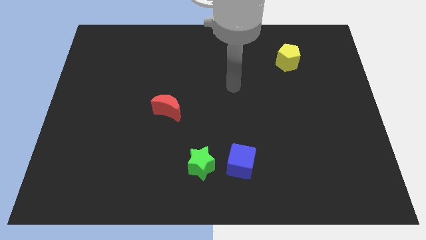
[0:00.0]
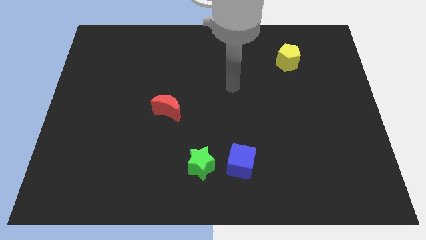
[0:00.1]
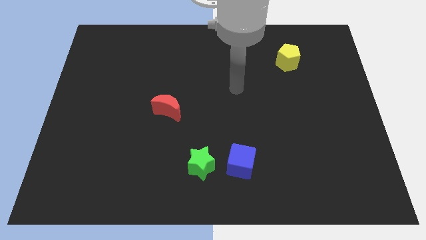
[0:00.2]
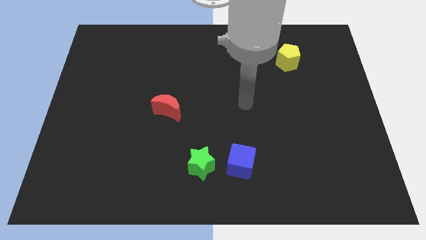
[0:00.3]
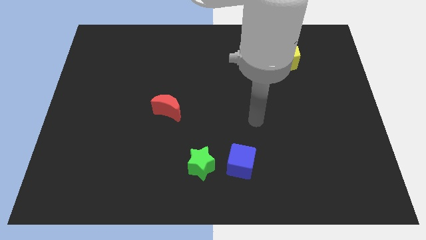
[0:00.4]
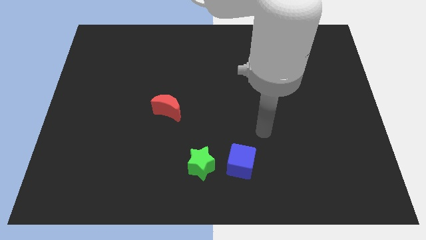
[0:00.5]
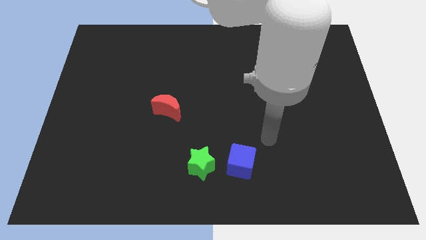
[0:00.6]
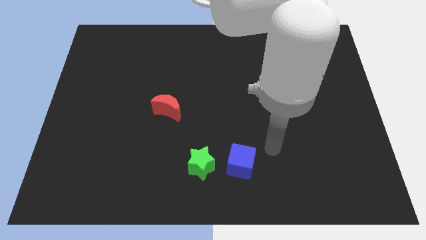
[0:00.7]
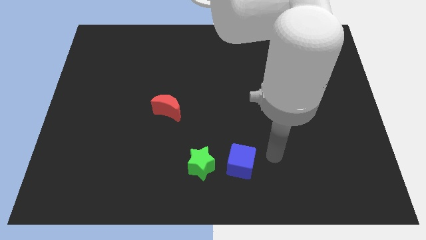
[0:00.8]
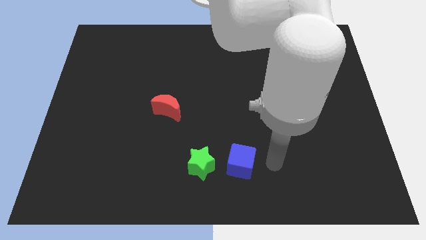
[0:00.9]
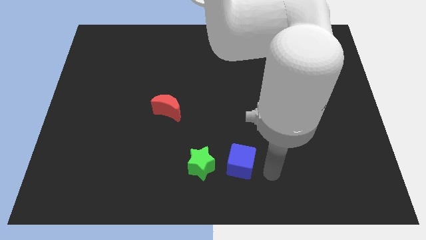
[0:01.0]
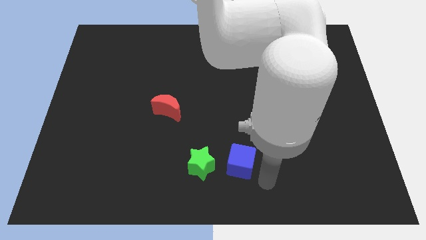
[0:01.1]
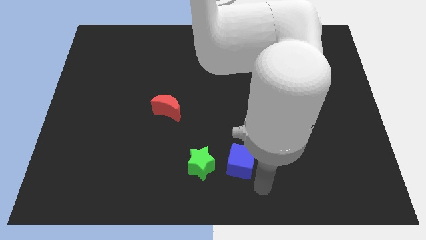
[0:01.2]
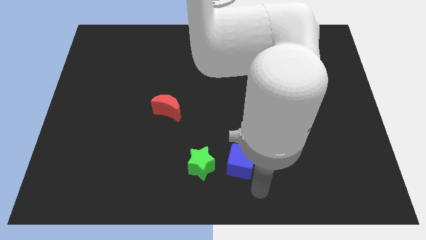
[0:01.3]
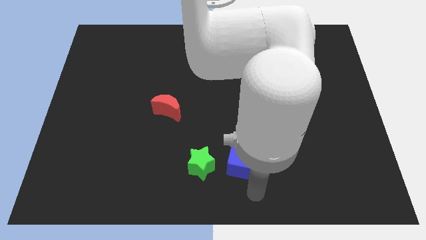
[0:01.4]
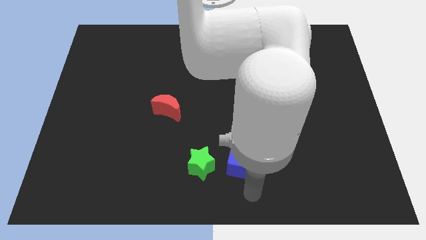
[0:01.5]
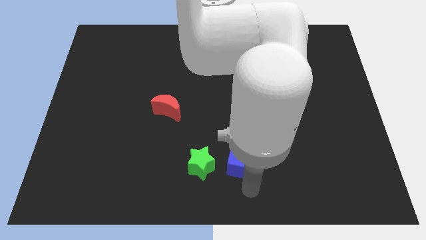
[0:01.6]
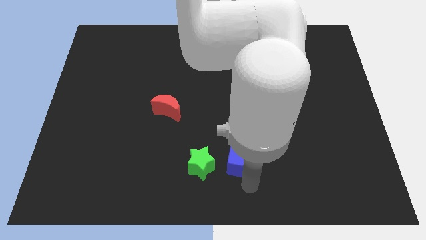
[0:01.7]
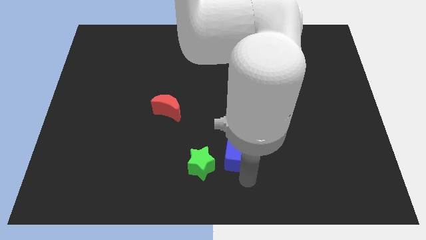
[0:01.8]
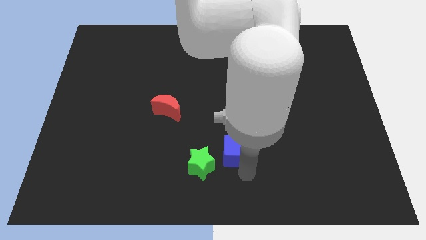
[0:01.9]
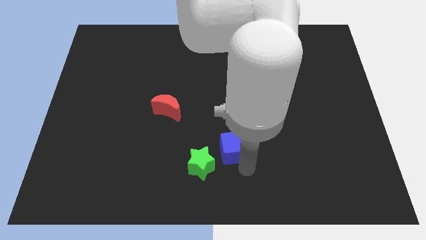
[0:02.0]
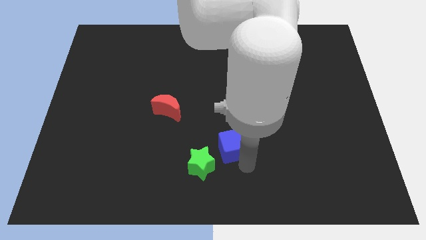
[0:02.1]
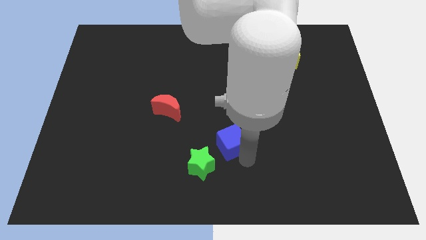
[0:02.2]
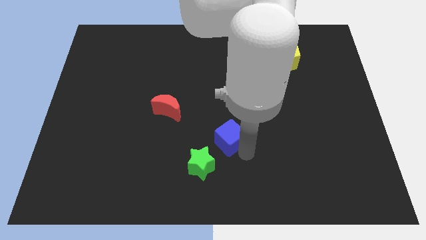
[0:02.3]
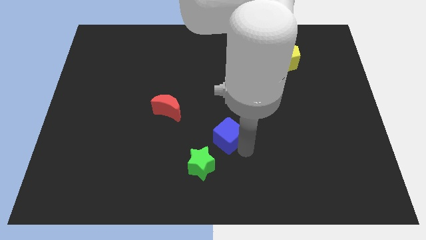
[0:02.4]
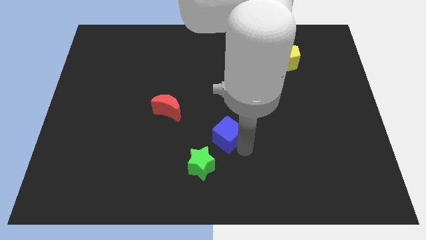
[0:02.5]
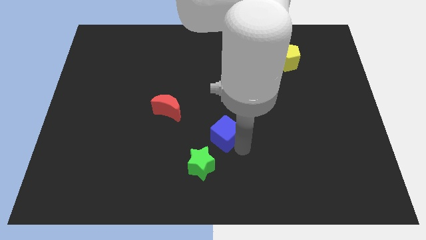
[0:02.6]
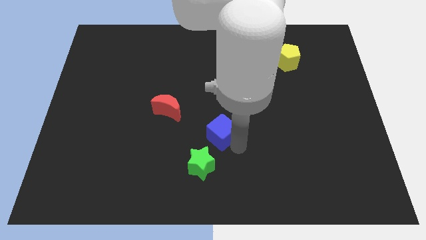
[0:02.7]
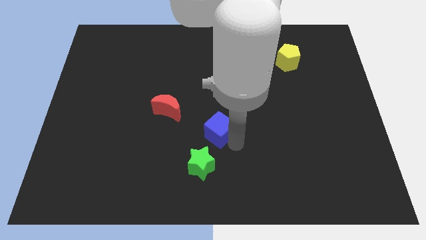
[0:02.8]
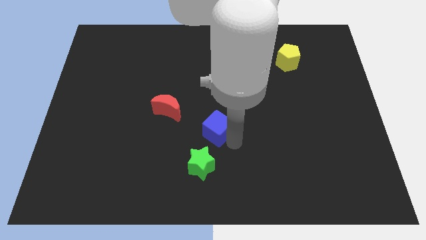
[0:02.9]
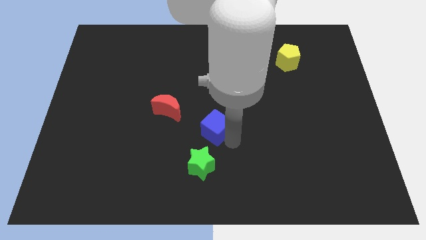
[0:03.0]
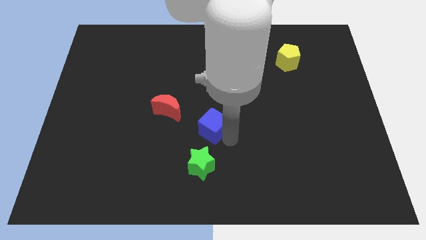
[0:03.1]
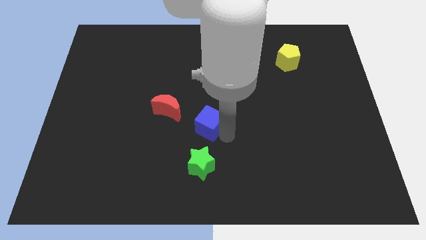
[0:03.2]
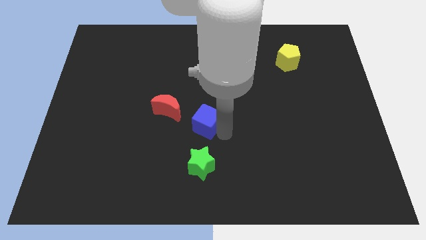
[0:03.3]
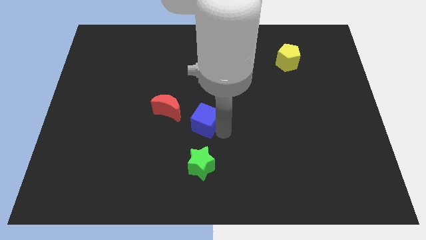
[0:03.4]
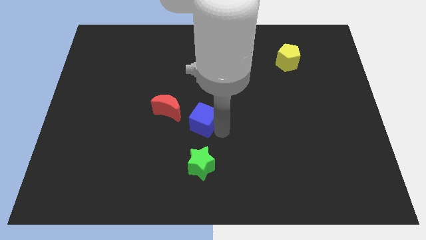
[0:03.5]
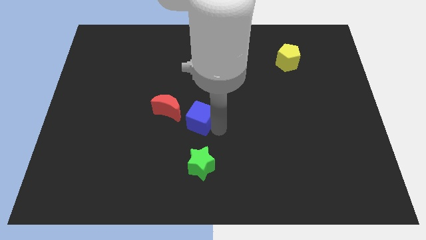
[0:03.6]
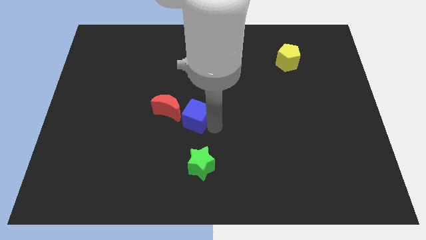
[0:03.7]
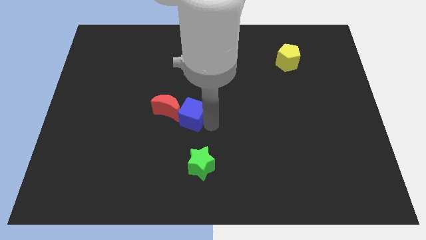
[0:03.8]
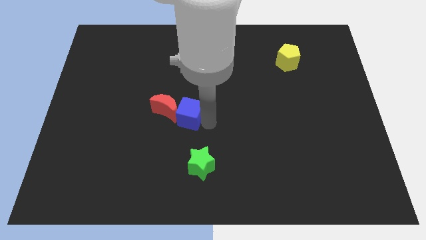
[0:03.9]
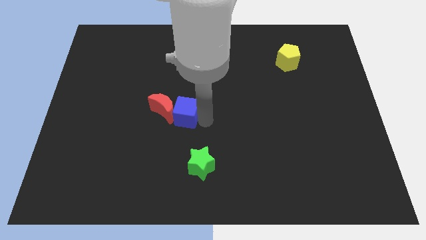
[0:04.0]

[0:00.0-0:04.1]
slide the blue block to the red block

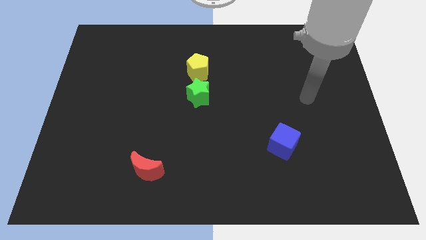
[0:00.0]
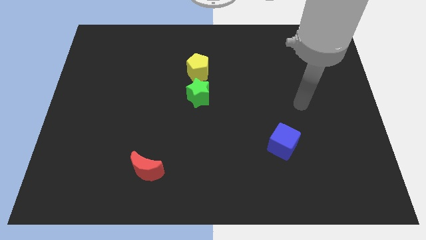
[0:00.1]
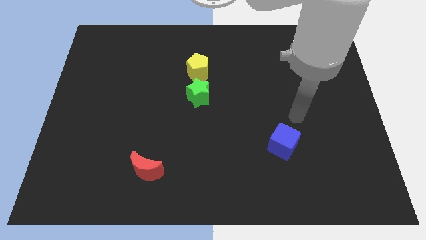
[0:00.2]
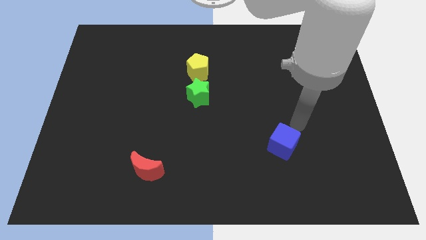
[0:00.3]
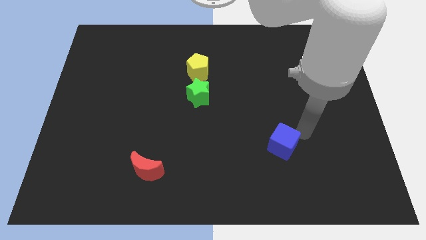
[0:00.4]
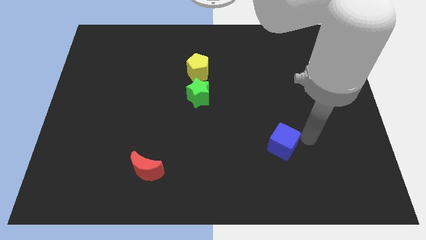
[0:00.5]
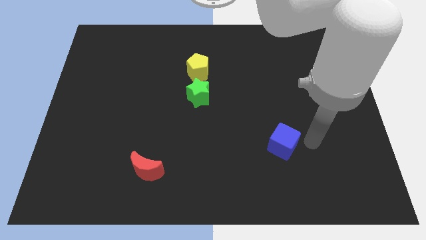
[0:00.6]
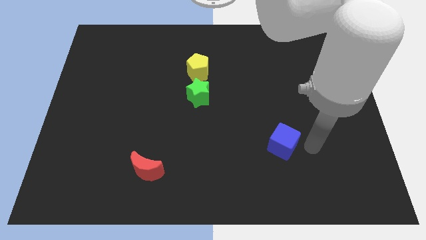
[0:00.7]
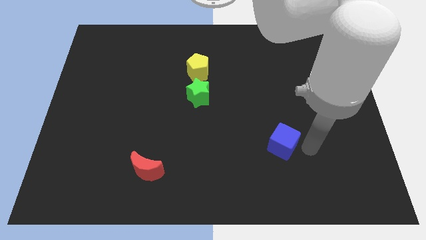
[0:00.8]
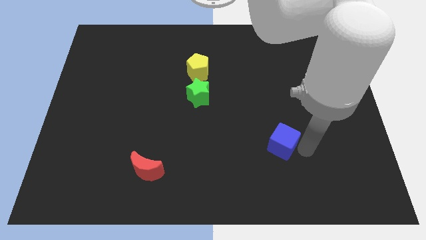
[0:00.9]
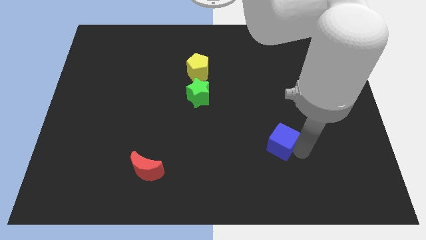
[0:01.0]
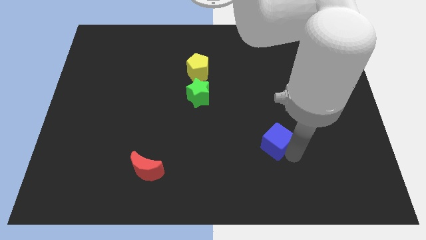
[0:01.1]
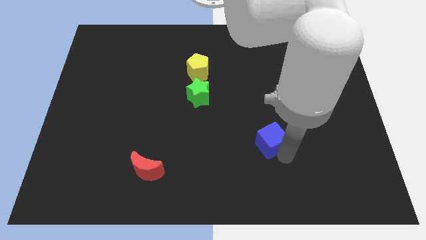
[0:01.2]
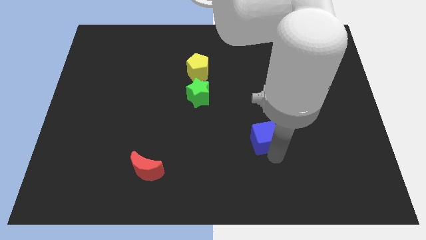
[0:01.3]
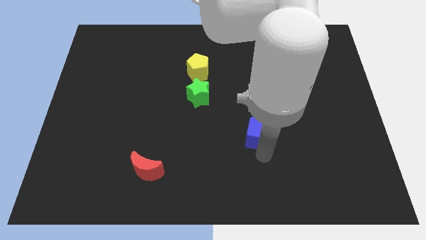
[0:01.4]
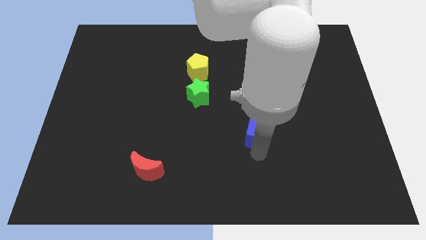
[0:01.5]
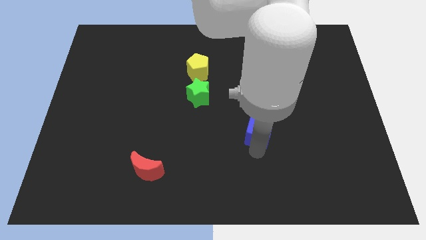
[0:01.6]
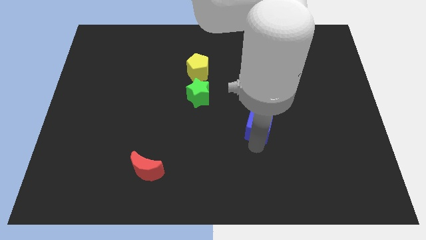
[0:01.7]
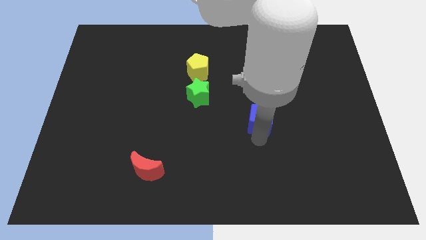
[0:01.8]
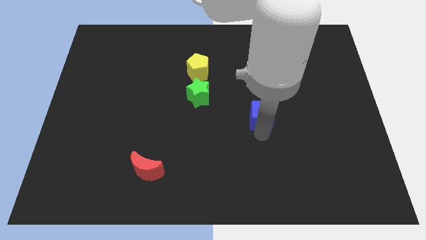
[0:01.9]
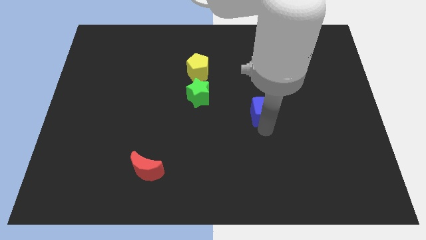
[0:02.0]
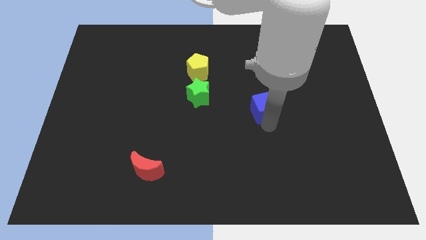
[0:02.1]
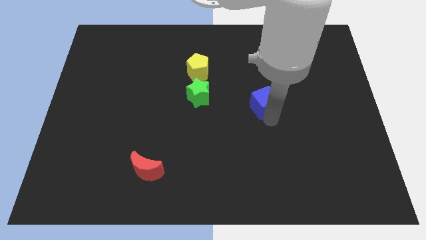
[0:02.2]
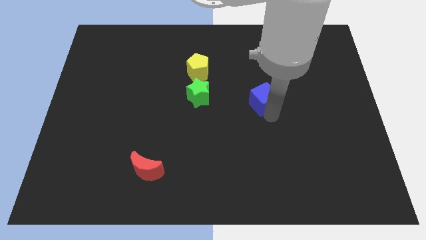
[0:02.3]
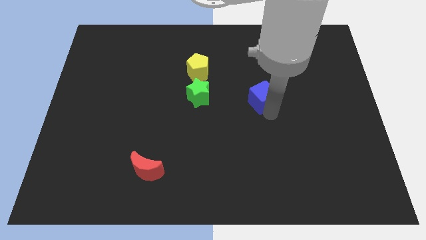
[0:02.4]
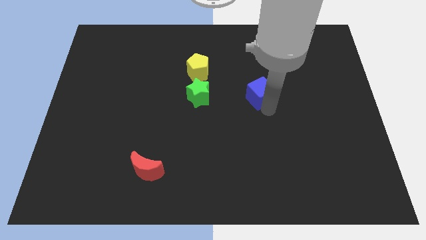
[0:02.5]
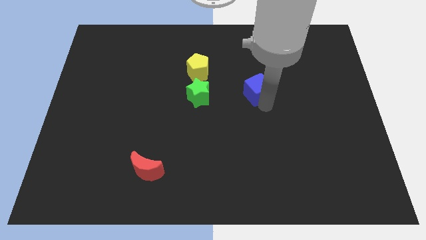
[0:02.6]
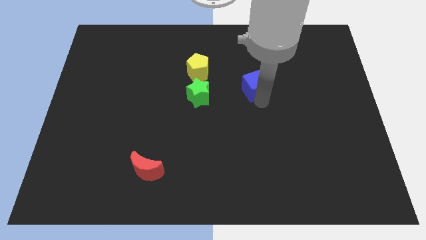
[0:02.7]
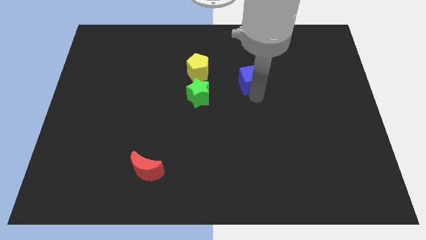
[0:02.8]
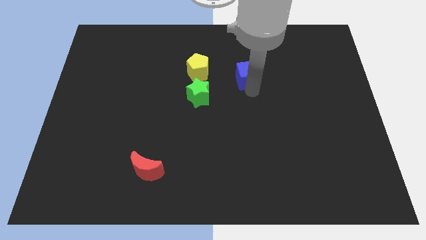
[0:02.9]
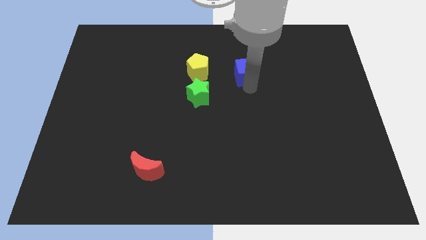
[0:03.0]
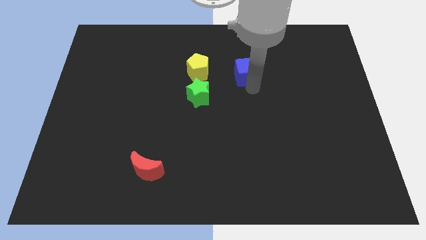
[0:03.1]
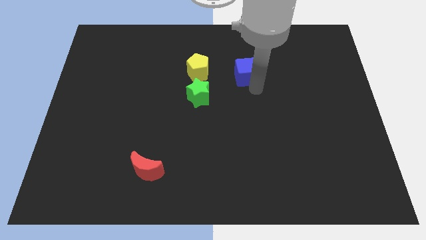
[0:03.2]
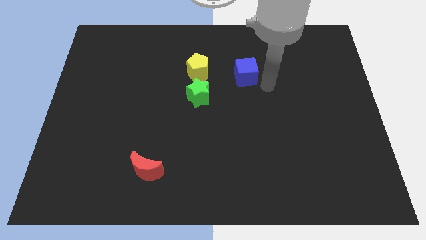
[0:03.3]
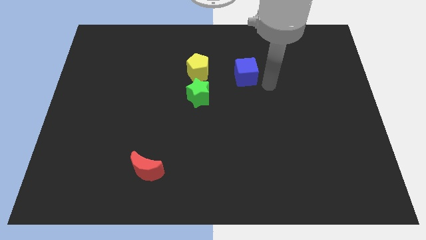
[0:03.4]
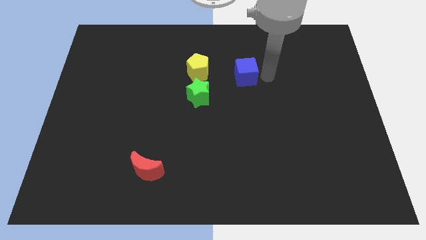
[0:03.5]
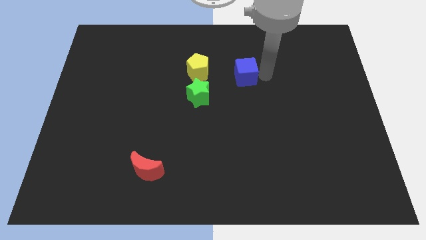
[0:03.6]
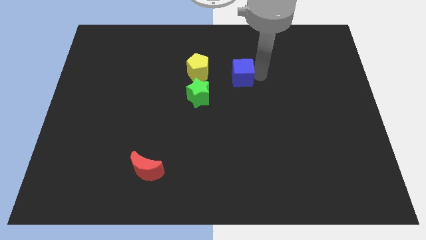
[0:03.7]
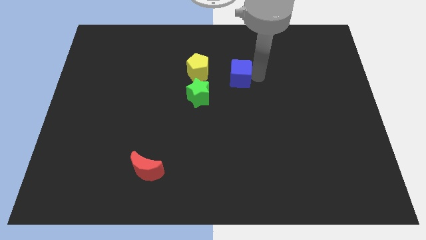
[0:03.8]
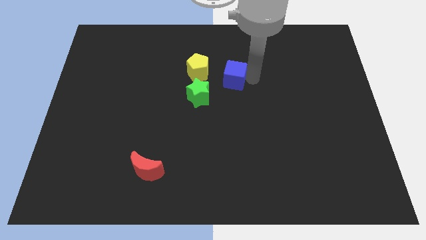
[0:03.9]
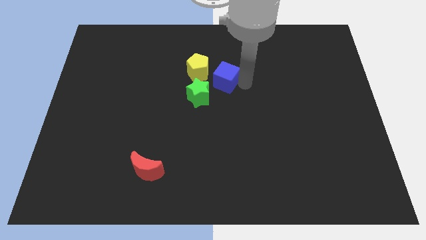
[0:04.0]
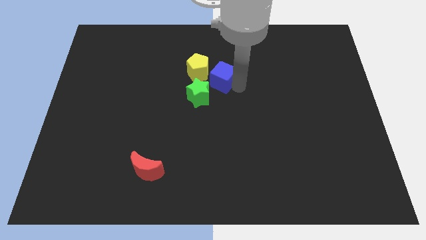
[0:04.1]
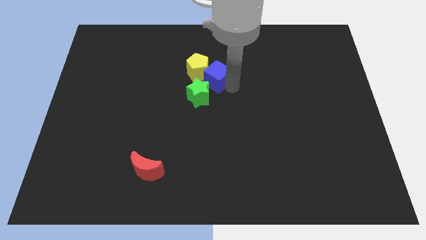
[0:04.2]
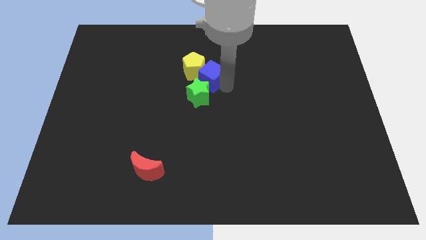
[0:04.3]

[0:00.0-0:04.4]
move the cube next to the pentagon

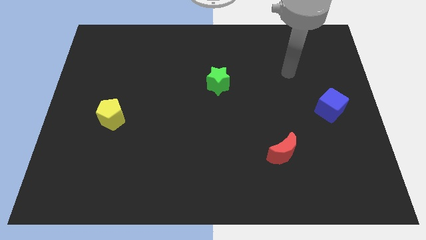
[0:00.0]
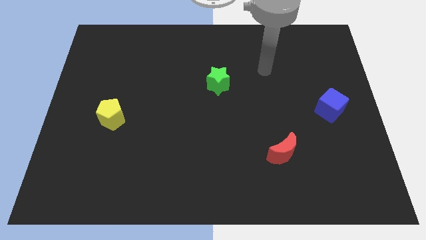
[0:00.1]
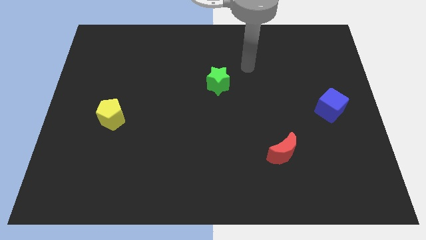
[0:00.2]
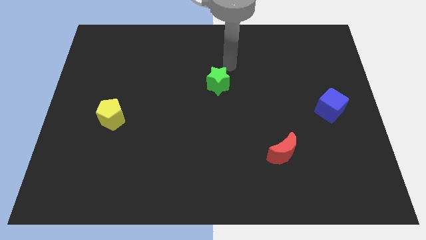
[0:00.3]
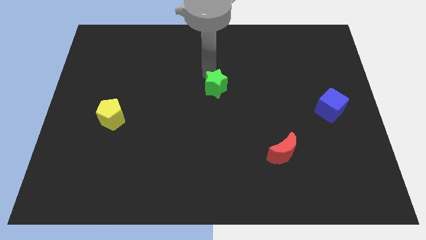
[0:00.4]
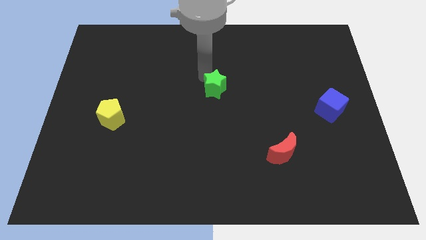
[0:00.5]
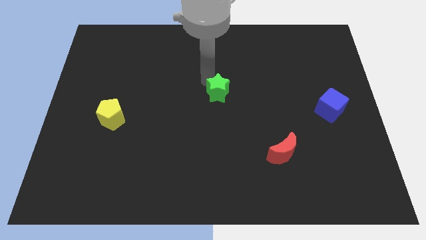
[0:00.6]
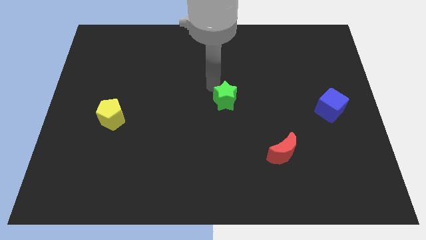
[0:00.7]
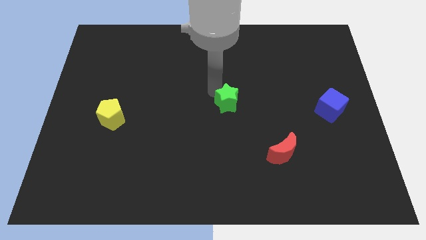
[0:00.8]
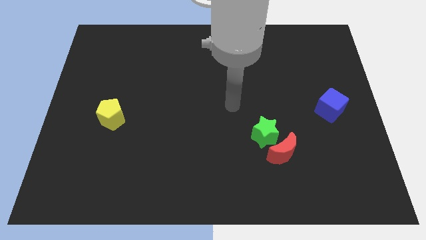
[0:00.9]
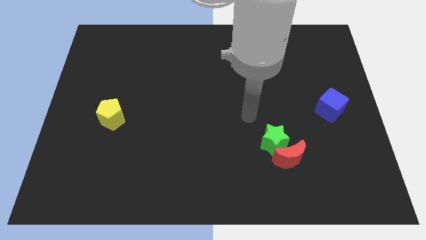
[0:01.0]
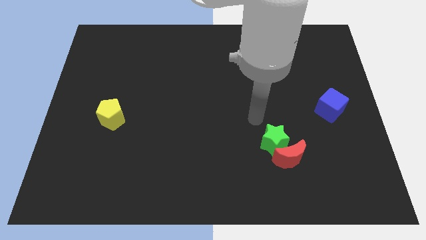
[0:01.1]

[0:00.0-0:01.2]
move the star to the red block
